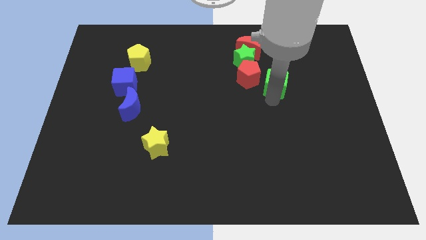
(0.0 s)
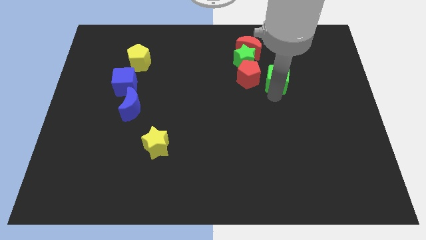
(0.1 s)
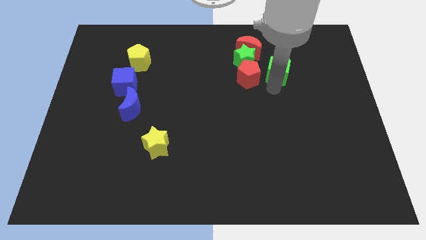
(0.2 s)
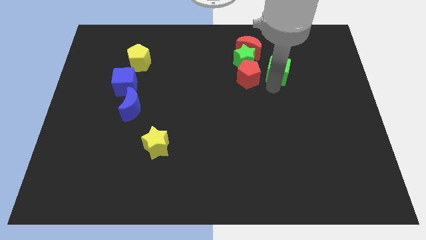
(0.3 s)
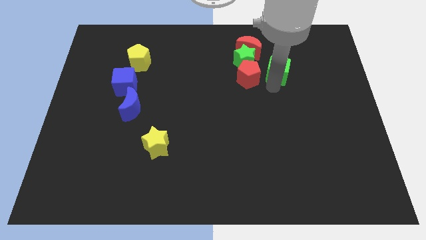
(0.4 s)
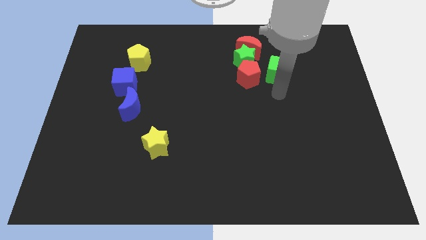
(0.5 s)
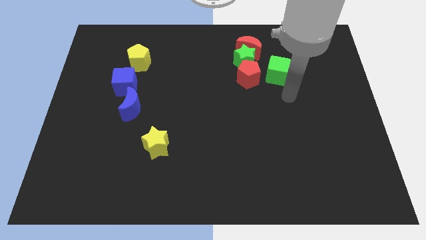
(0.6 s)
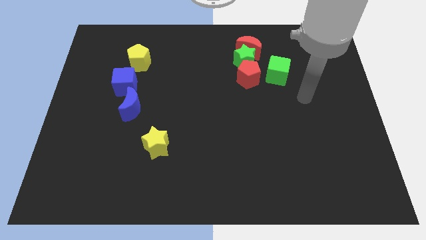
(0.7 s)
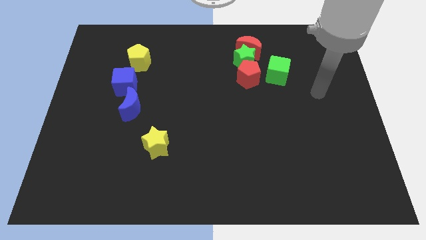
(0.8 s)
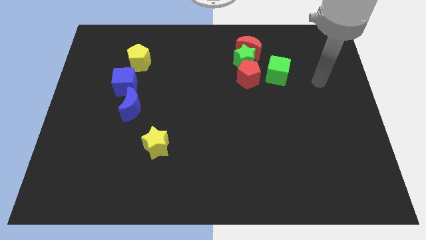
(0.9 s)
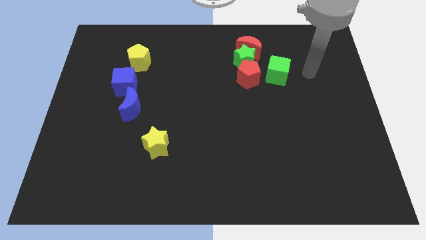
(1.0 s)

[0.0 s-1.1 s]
put green cube to the right of red pentagon

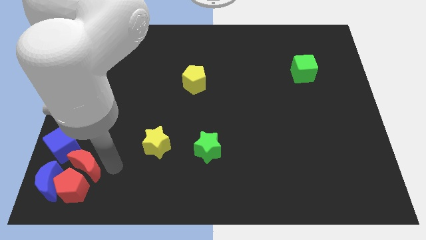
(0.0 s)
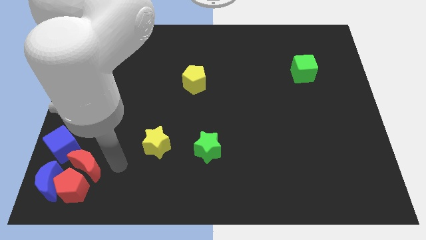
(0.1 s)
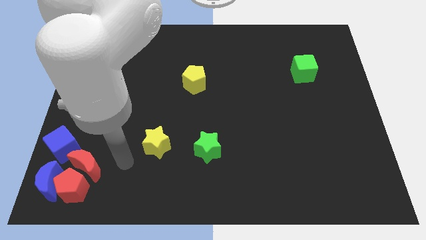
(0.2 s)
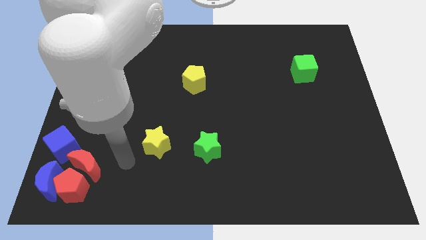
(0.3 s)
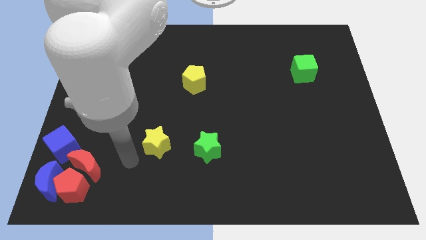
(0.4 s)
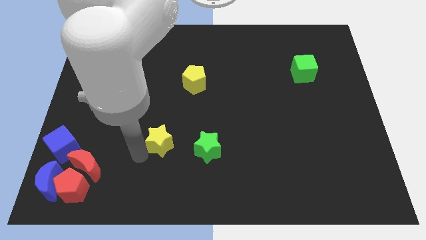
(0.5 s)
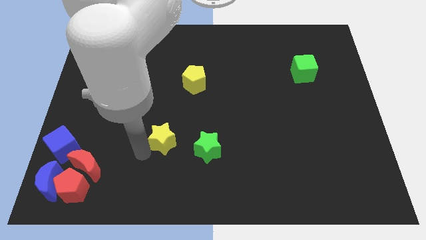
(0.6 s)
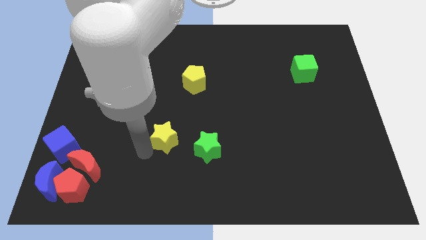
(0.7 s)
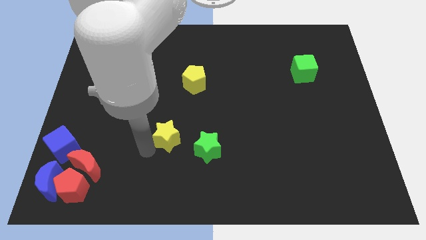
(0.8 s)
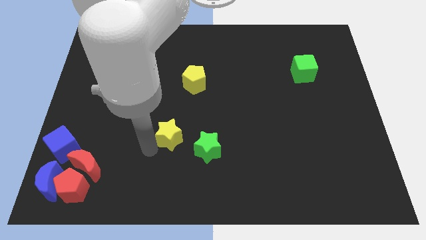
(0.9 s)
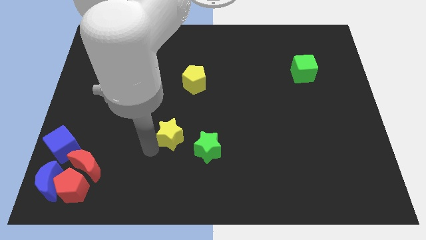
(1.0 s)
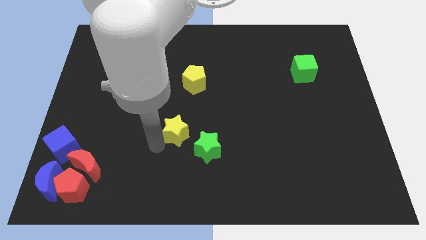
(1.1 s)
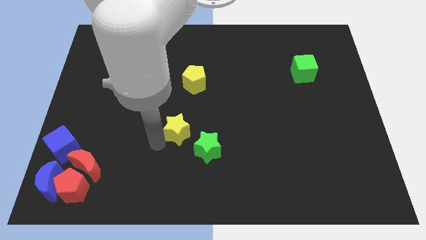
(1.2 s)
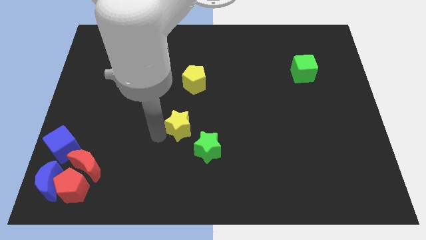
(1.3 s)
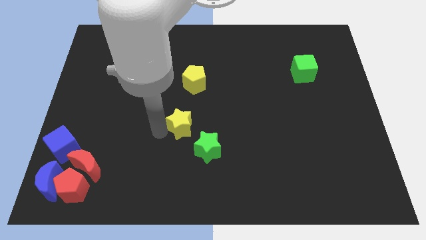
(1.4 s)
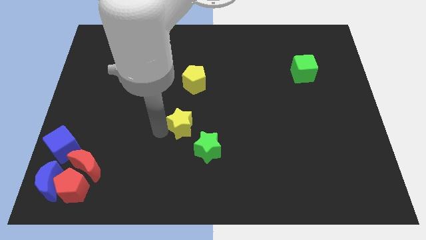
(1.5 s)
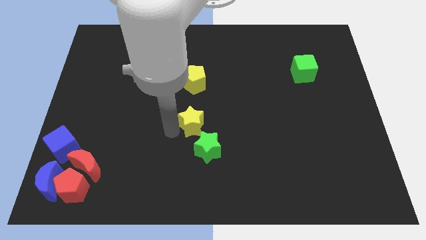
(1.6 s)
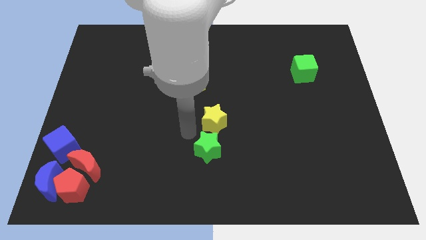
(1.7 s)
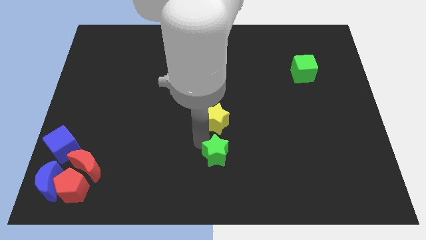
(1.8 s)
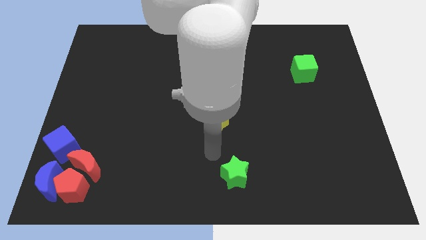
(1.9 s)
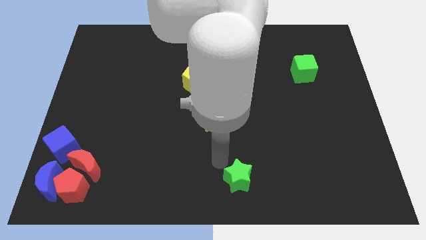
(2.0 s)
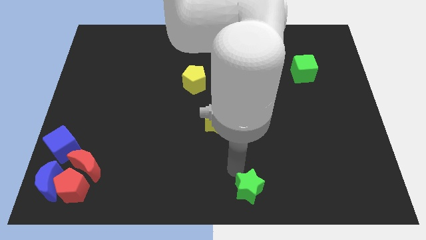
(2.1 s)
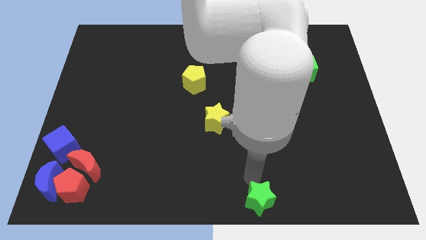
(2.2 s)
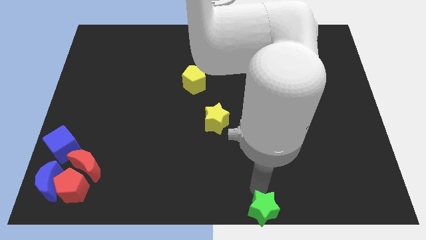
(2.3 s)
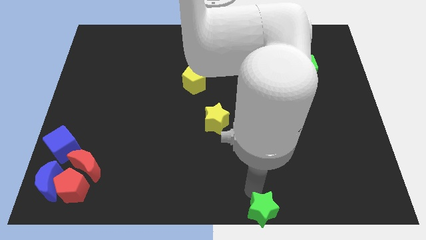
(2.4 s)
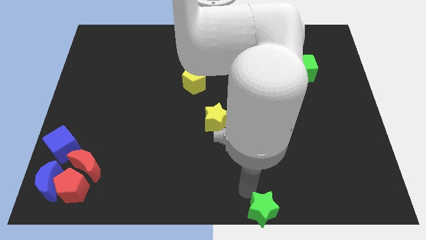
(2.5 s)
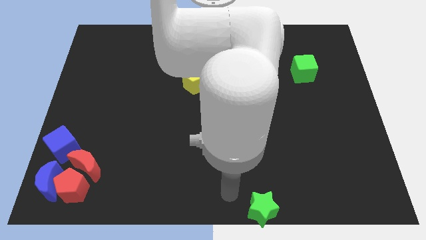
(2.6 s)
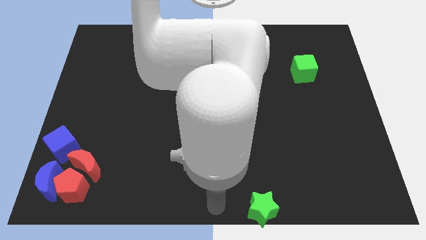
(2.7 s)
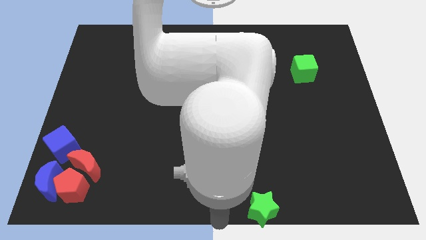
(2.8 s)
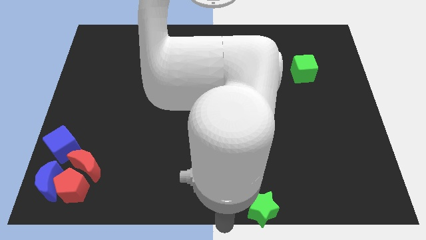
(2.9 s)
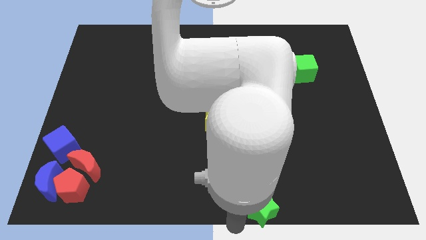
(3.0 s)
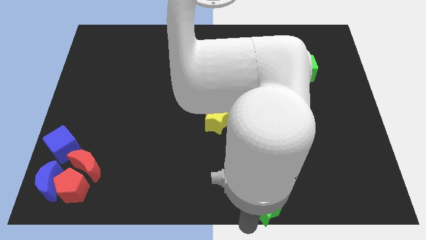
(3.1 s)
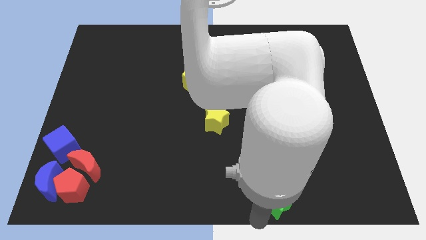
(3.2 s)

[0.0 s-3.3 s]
place green star at the bottom center

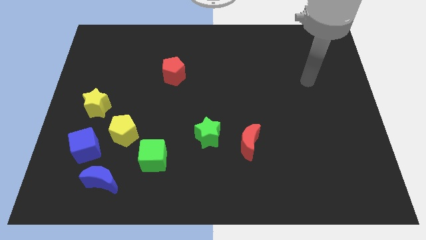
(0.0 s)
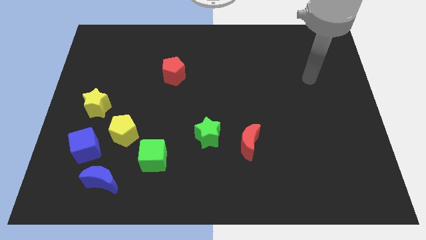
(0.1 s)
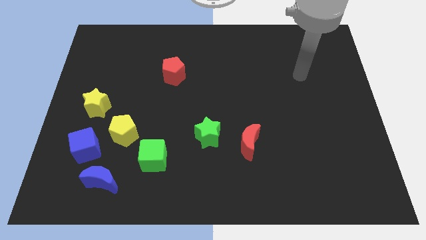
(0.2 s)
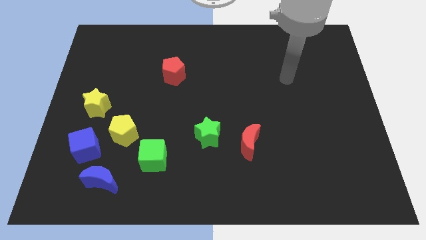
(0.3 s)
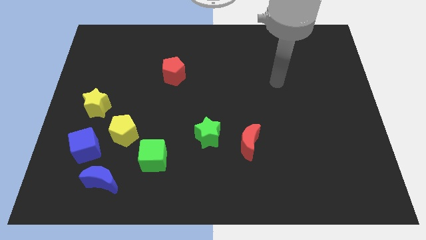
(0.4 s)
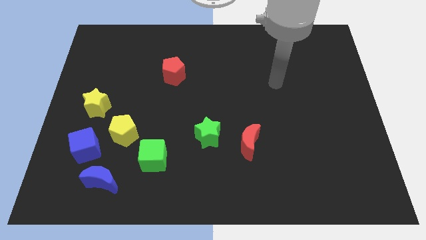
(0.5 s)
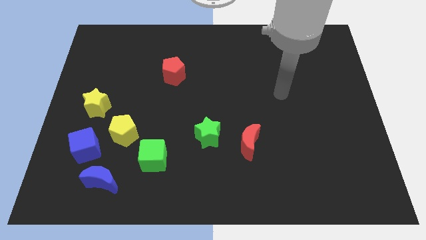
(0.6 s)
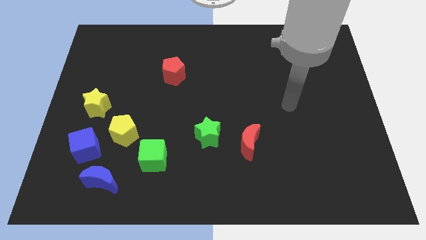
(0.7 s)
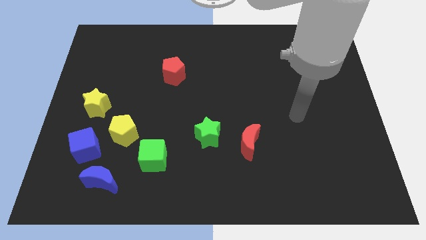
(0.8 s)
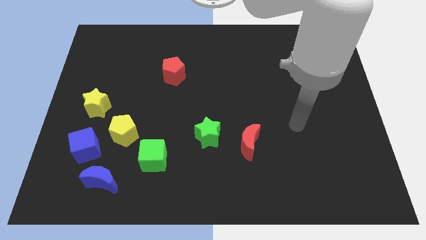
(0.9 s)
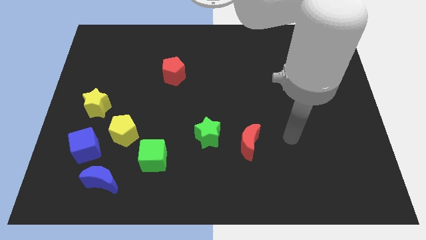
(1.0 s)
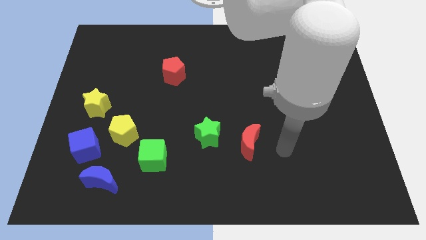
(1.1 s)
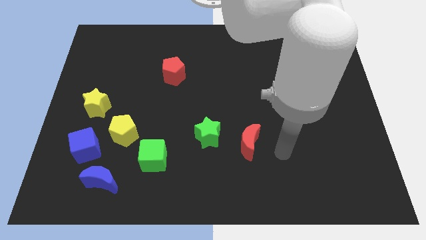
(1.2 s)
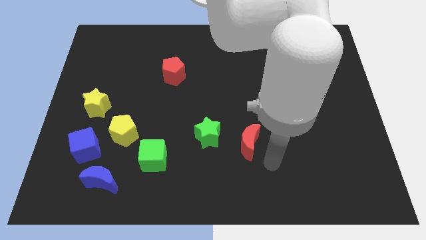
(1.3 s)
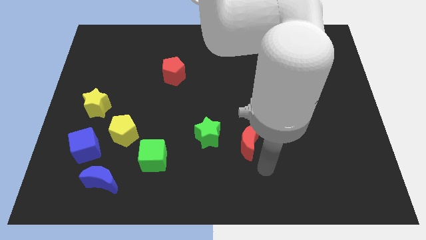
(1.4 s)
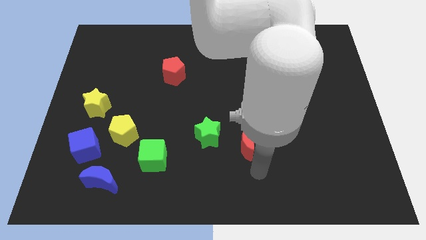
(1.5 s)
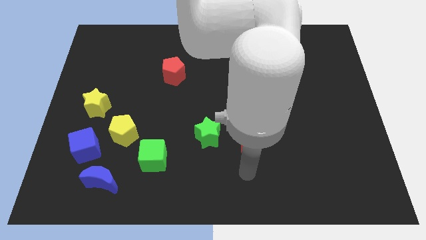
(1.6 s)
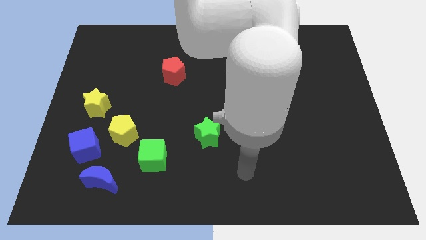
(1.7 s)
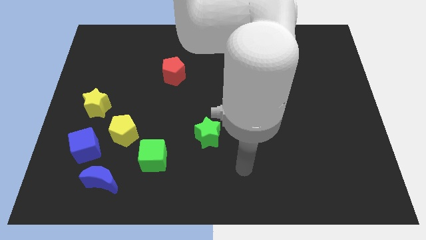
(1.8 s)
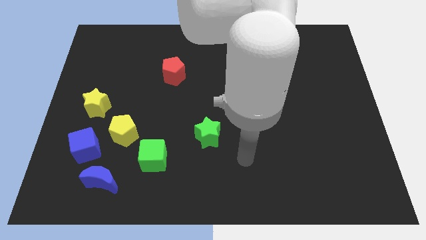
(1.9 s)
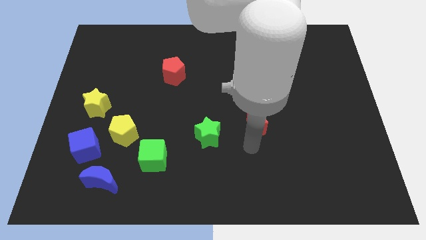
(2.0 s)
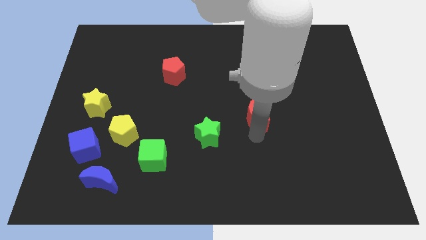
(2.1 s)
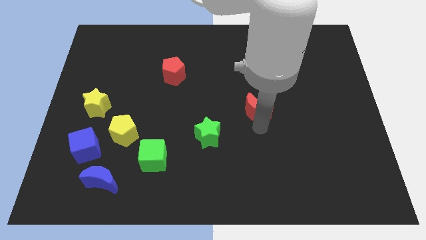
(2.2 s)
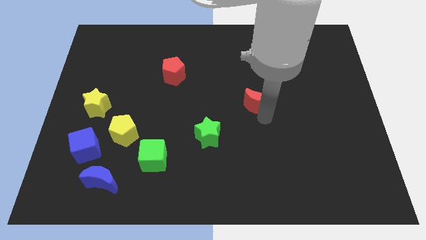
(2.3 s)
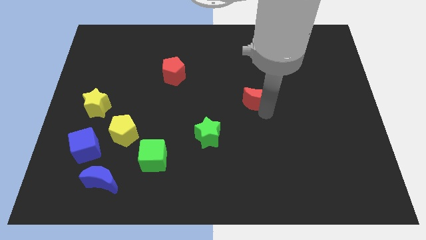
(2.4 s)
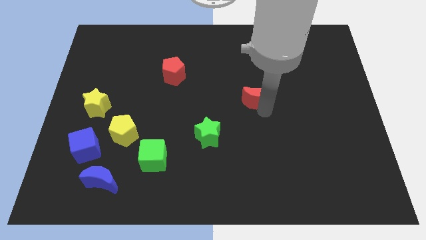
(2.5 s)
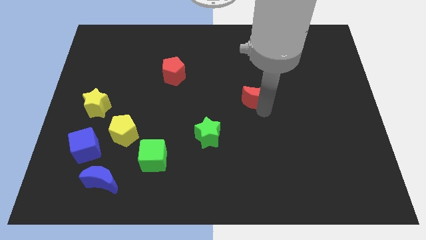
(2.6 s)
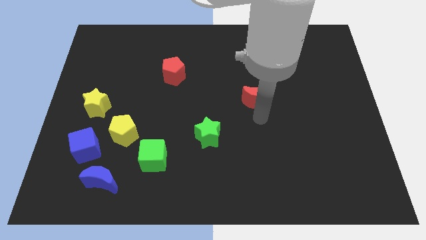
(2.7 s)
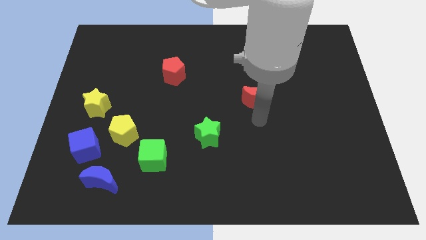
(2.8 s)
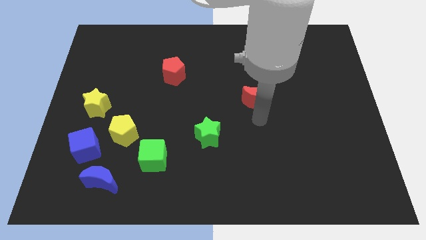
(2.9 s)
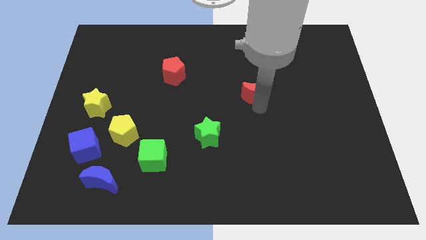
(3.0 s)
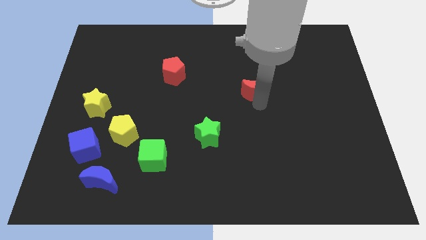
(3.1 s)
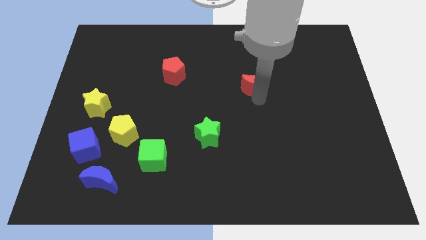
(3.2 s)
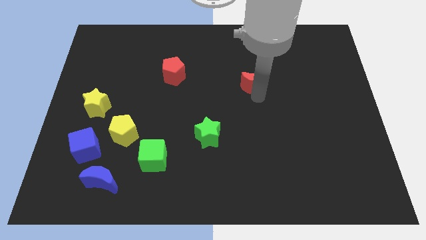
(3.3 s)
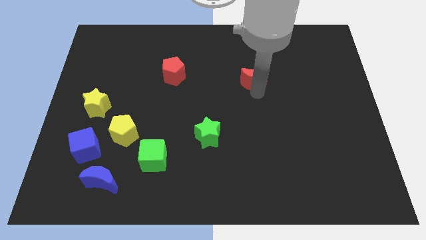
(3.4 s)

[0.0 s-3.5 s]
push the red moon to the top center of the board

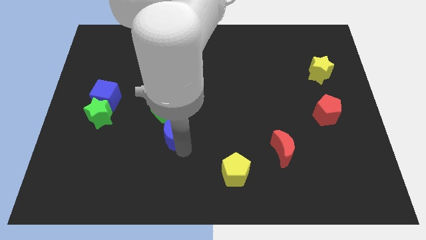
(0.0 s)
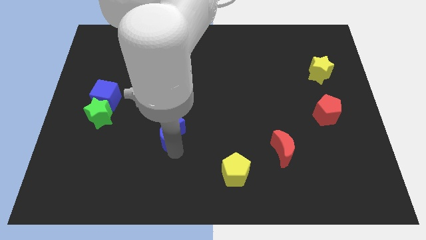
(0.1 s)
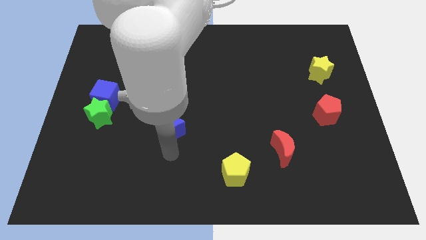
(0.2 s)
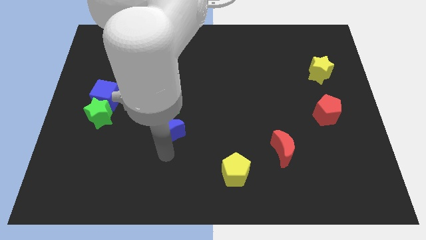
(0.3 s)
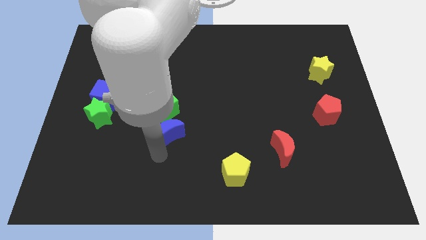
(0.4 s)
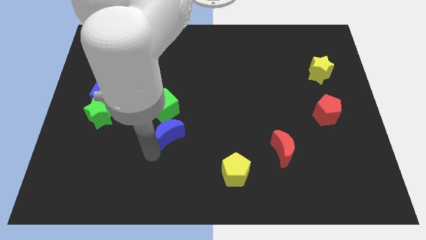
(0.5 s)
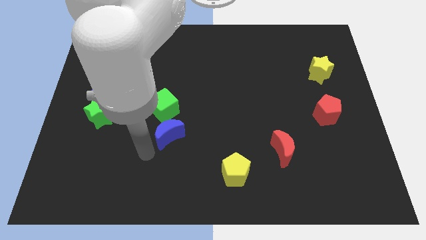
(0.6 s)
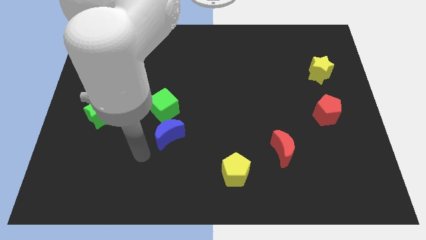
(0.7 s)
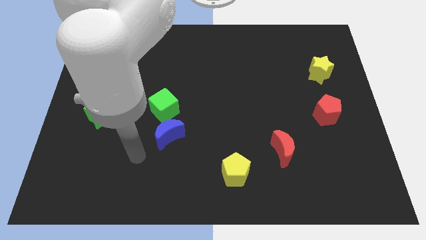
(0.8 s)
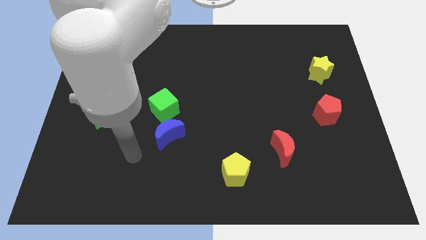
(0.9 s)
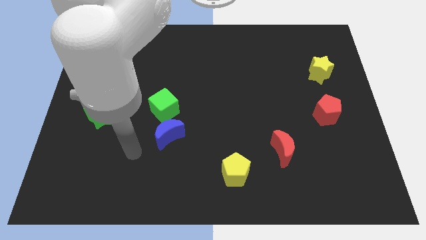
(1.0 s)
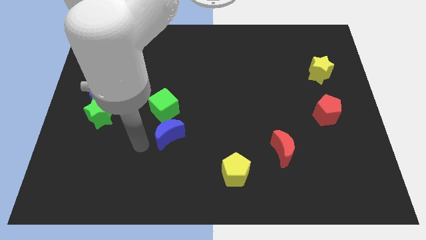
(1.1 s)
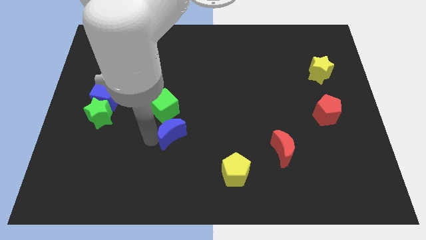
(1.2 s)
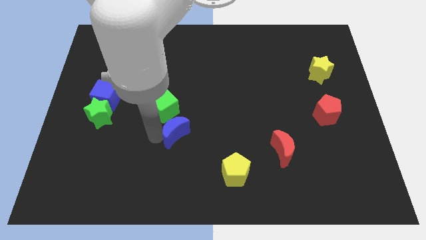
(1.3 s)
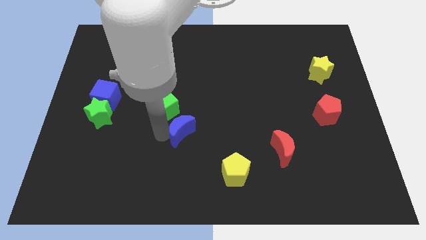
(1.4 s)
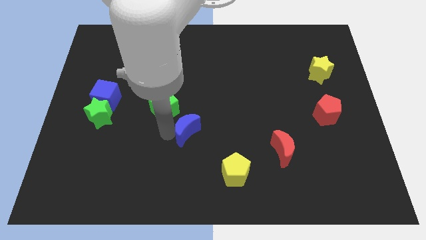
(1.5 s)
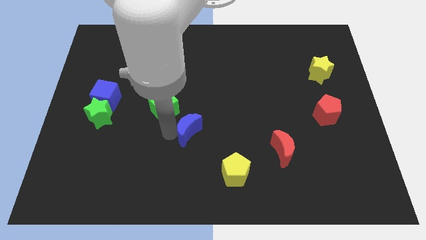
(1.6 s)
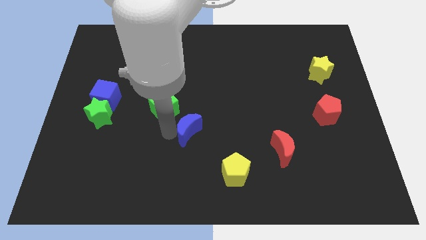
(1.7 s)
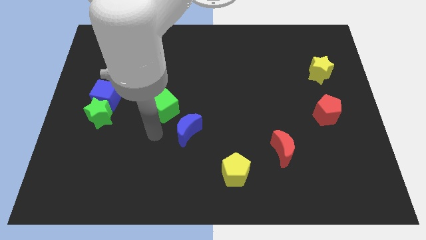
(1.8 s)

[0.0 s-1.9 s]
place the blue crescent in between green cube and yellow pentagon
